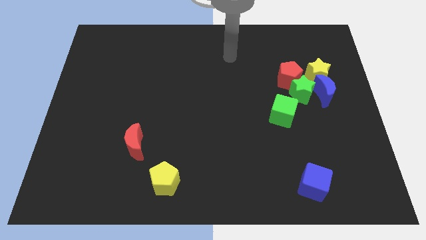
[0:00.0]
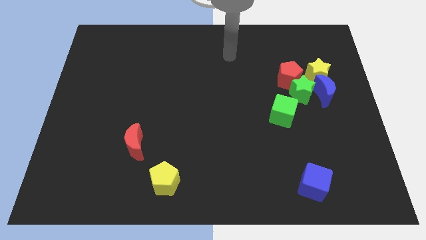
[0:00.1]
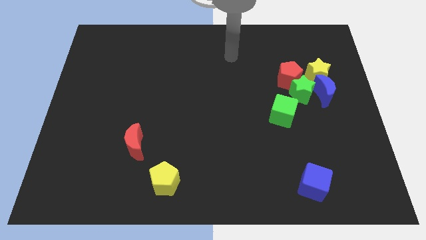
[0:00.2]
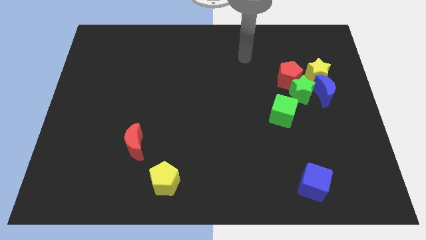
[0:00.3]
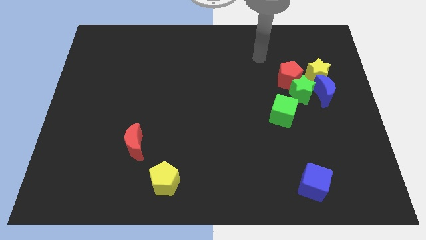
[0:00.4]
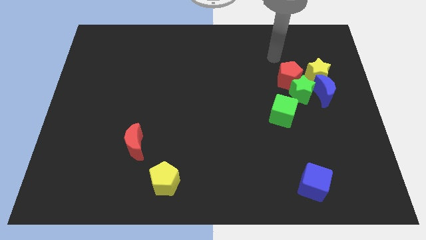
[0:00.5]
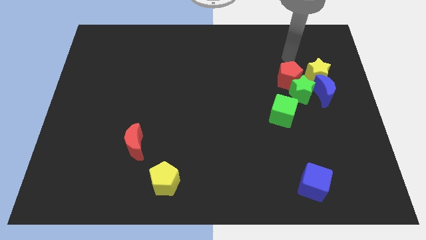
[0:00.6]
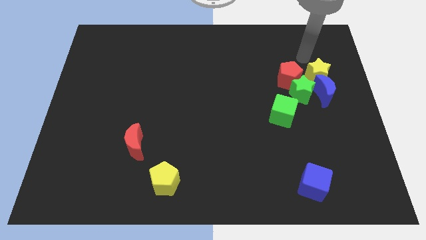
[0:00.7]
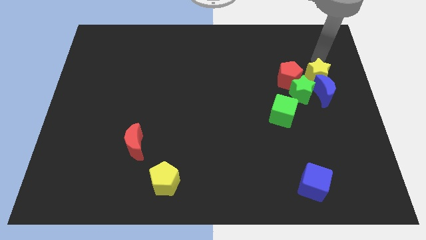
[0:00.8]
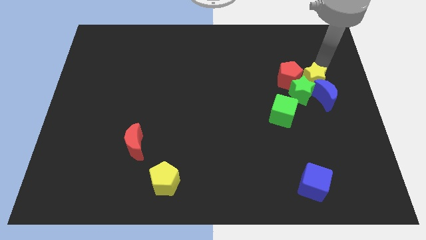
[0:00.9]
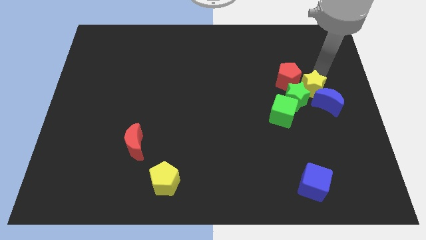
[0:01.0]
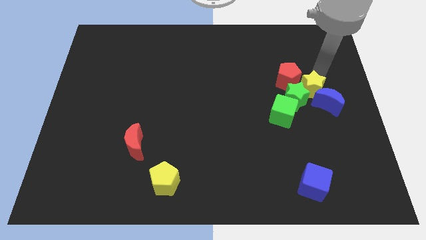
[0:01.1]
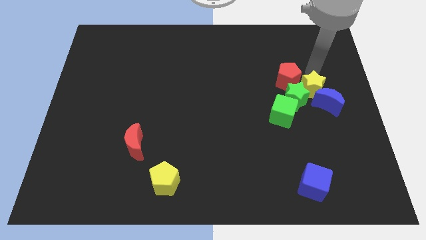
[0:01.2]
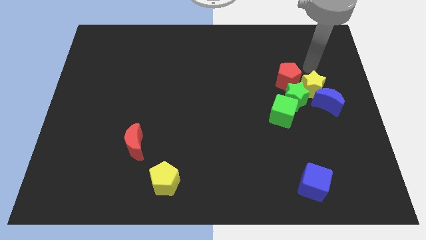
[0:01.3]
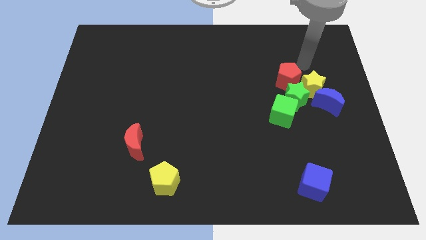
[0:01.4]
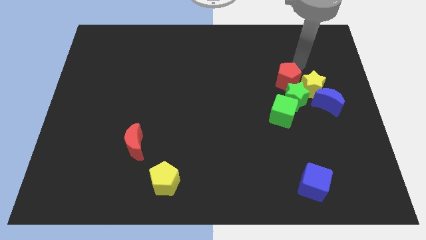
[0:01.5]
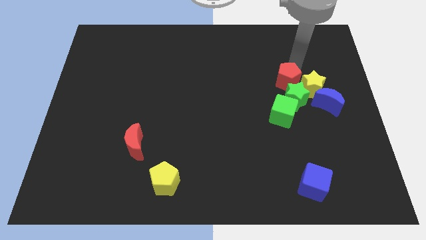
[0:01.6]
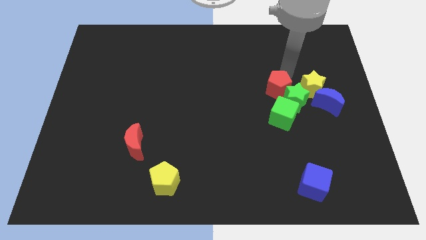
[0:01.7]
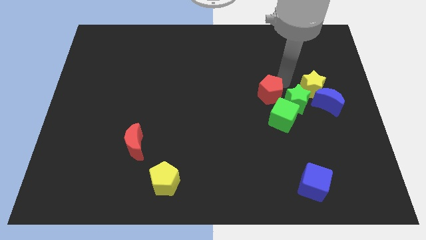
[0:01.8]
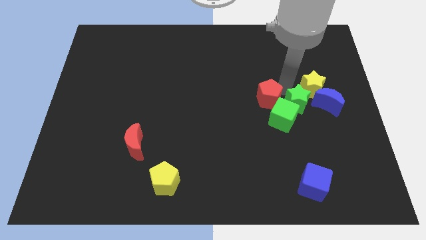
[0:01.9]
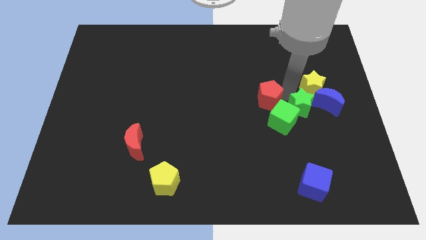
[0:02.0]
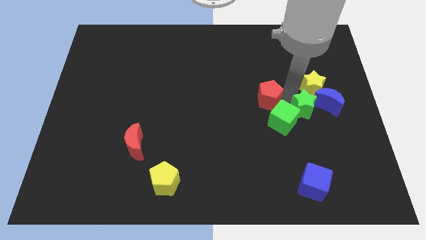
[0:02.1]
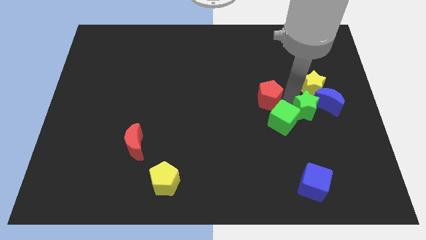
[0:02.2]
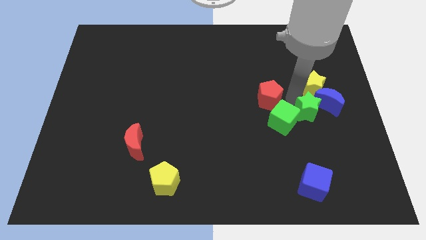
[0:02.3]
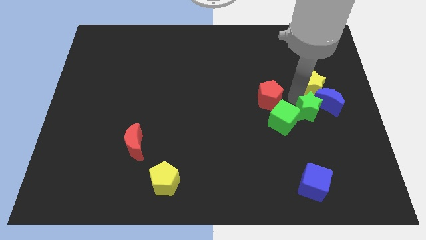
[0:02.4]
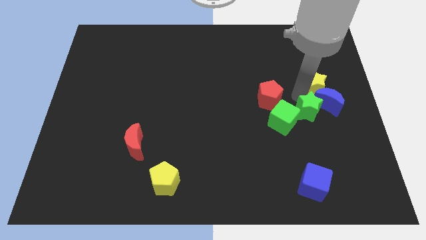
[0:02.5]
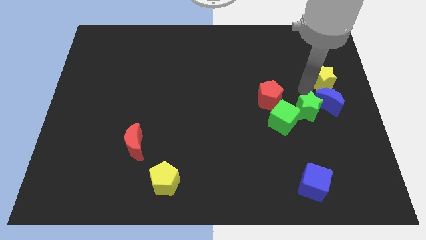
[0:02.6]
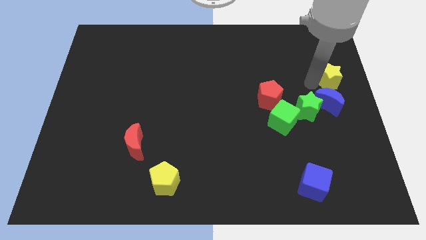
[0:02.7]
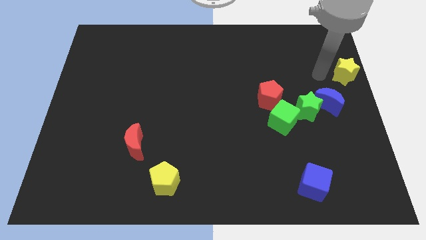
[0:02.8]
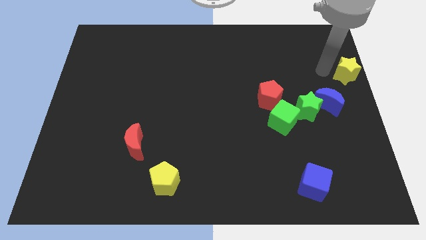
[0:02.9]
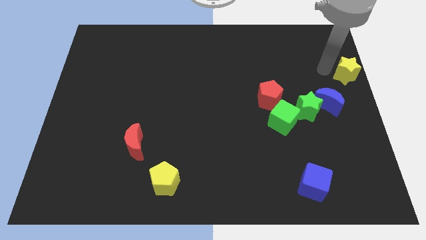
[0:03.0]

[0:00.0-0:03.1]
move the yellow star to the center right corner of the board

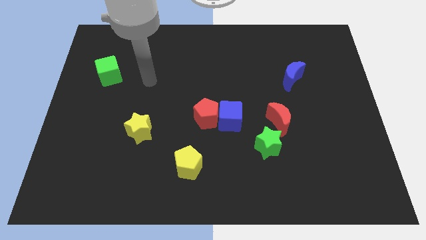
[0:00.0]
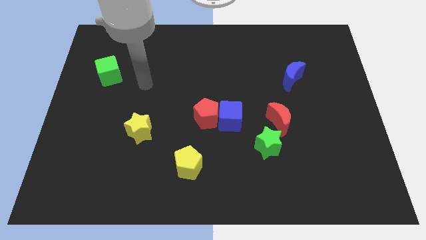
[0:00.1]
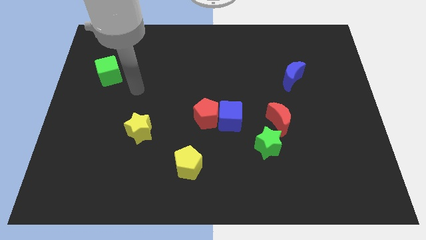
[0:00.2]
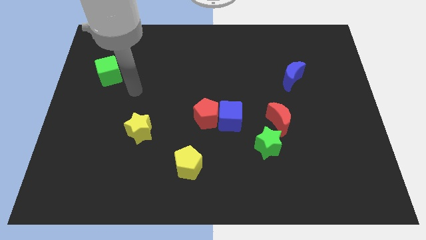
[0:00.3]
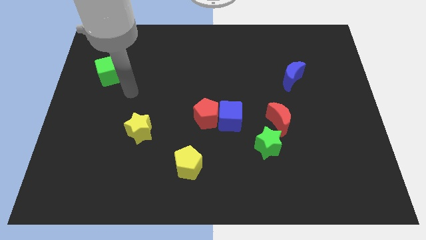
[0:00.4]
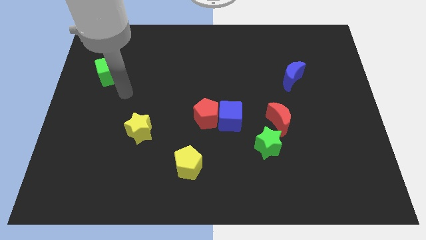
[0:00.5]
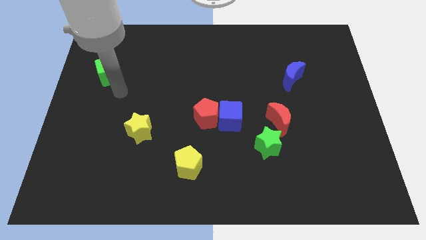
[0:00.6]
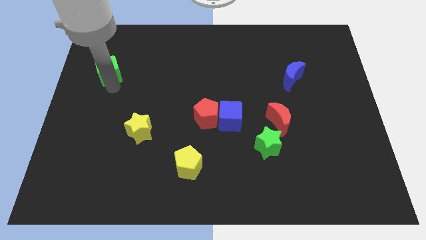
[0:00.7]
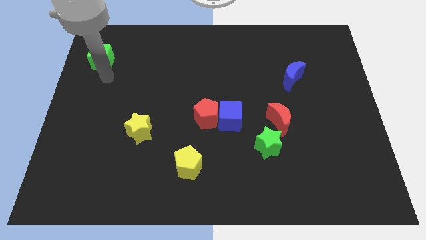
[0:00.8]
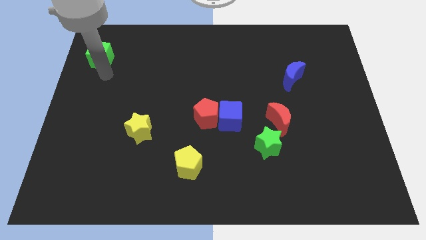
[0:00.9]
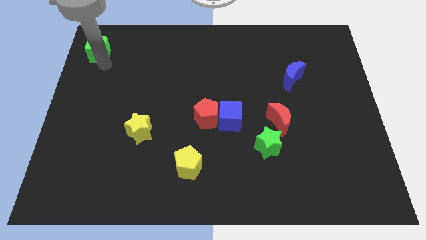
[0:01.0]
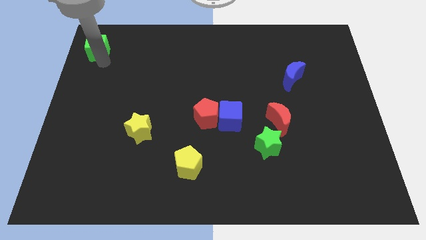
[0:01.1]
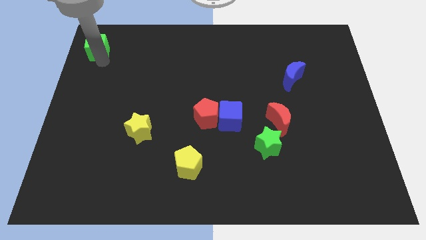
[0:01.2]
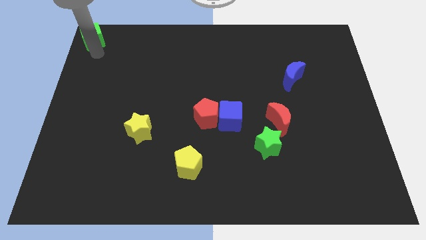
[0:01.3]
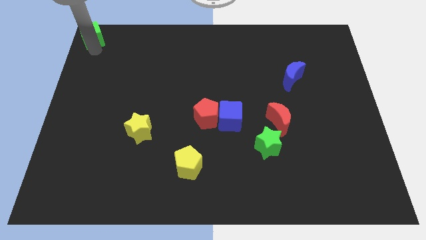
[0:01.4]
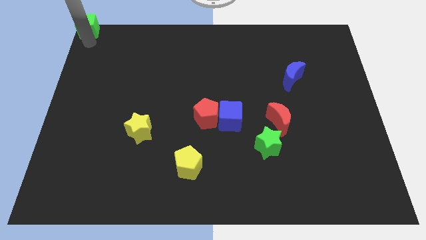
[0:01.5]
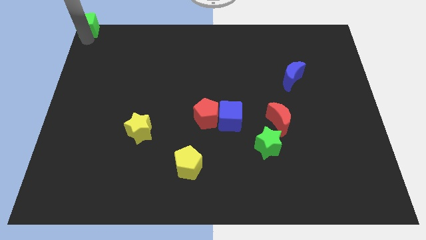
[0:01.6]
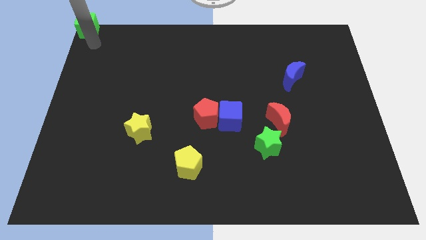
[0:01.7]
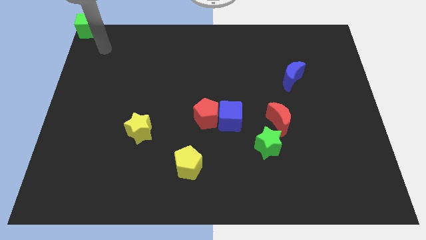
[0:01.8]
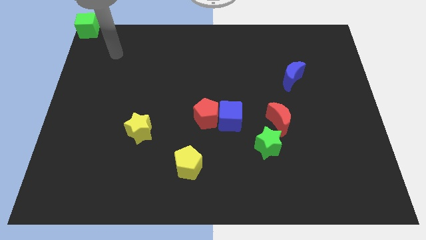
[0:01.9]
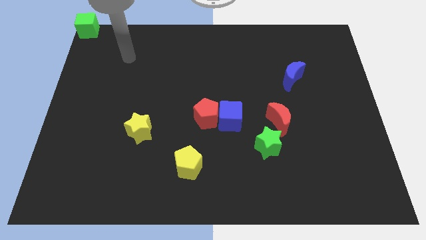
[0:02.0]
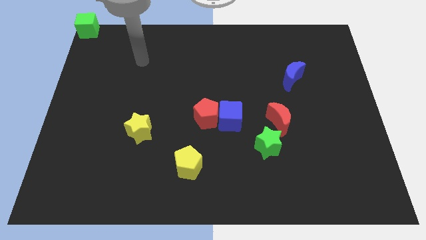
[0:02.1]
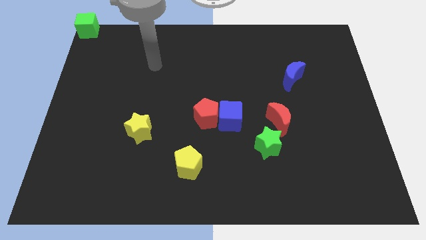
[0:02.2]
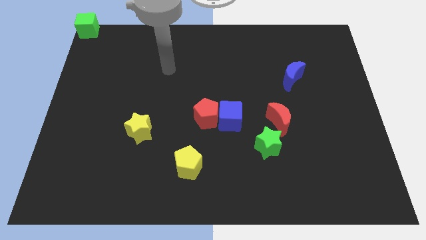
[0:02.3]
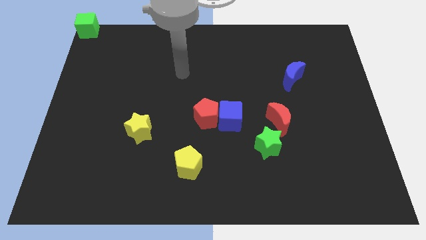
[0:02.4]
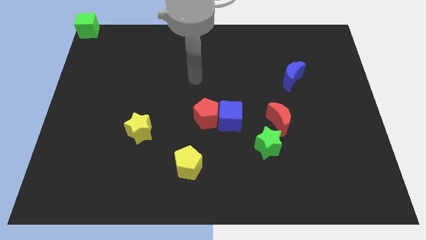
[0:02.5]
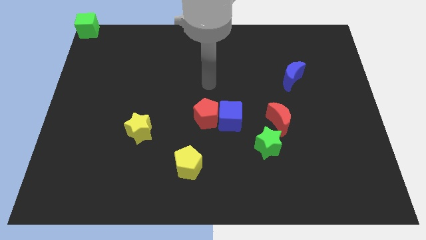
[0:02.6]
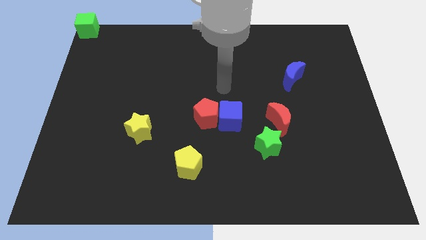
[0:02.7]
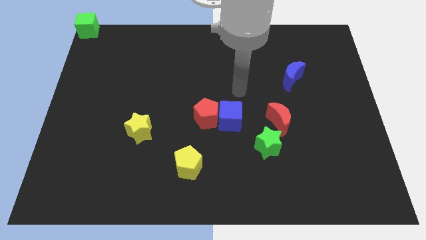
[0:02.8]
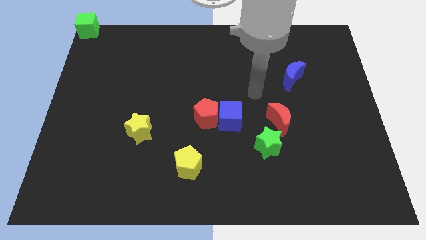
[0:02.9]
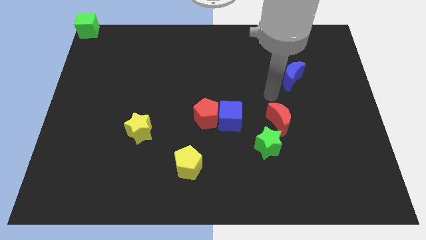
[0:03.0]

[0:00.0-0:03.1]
move green cube to the top left

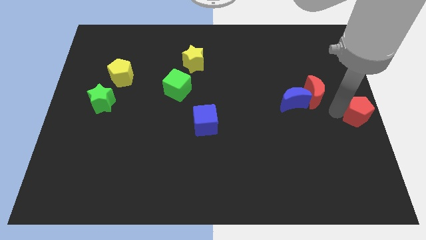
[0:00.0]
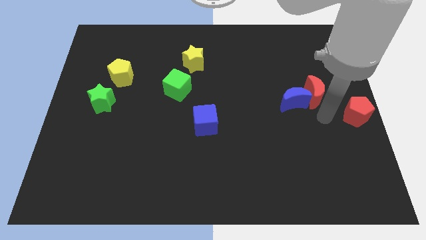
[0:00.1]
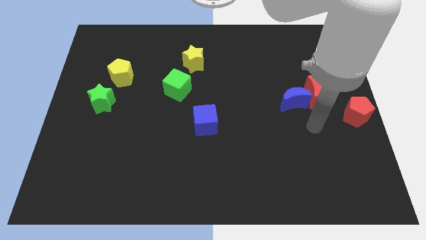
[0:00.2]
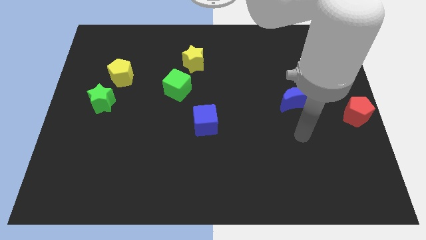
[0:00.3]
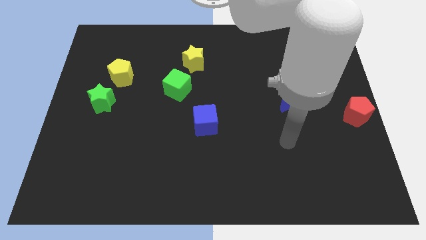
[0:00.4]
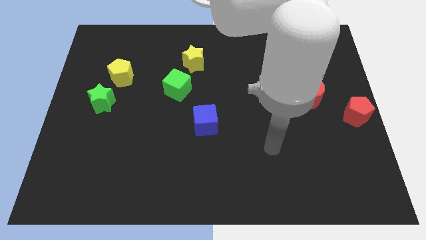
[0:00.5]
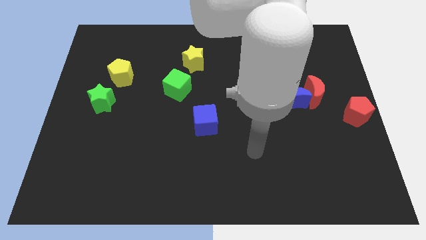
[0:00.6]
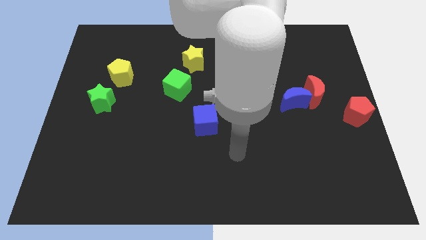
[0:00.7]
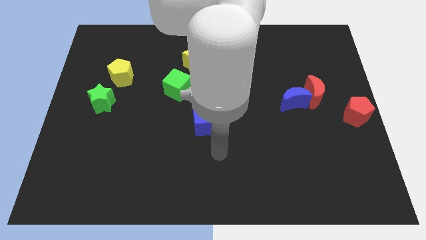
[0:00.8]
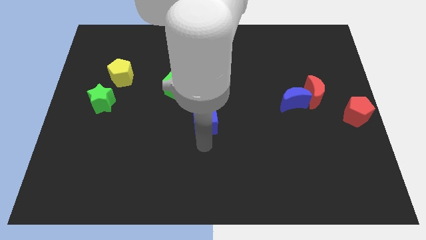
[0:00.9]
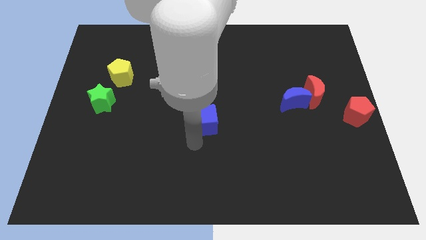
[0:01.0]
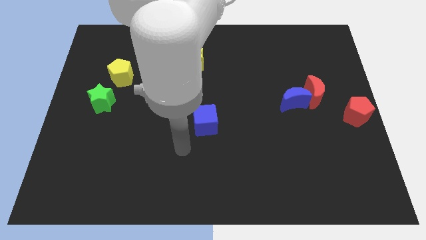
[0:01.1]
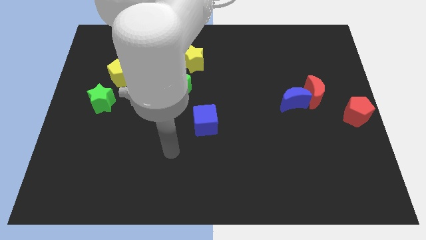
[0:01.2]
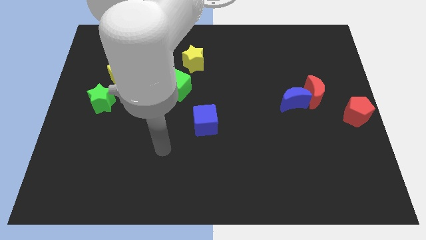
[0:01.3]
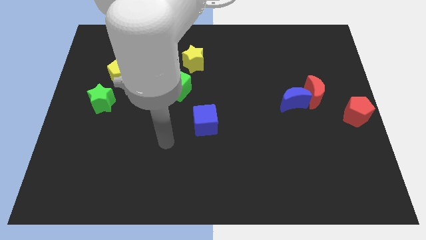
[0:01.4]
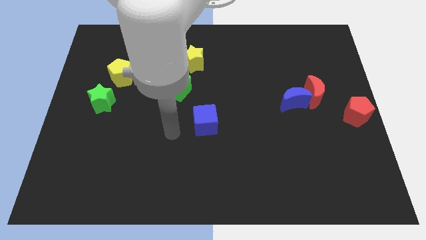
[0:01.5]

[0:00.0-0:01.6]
point your arm towards blue cube

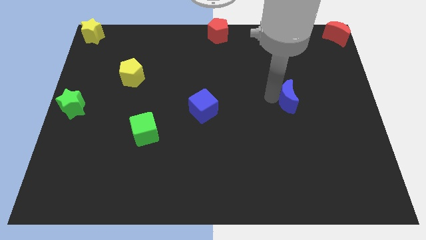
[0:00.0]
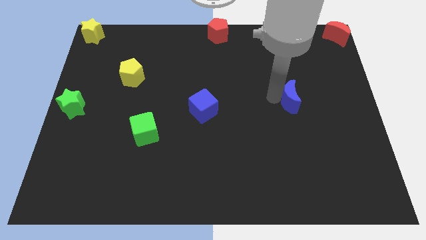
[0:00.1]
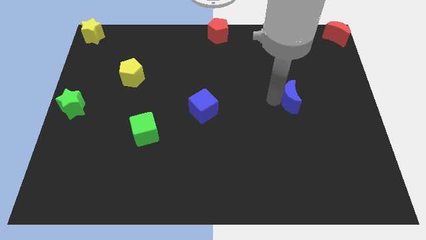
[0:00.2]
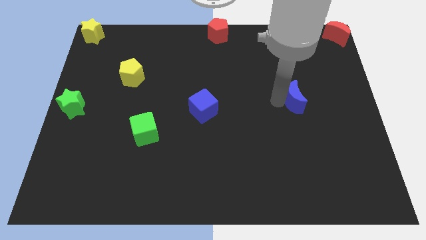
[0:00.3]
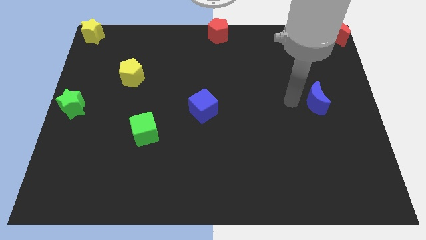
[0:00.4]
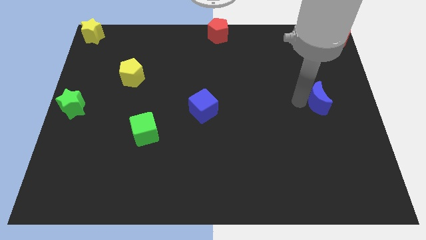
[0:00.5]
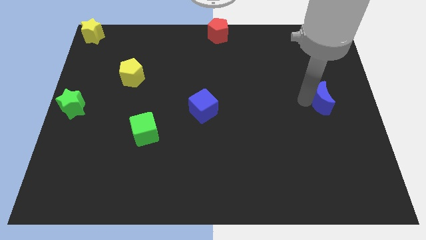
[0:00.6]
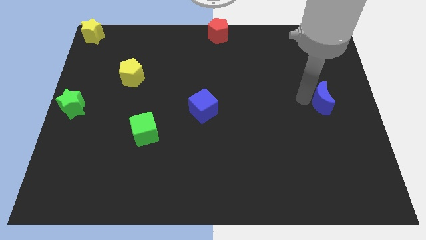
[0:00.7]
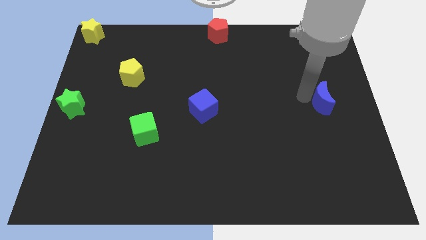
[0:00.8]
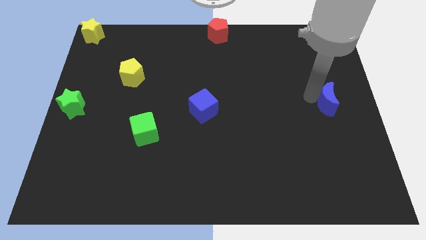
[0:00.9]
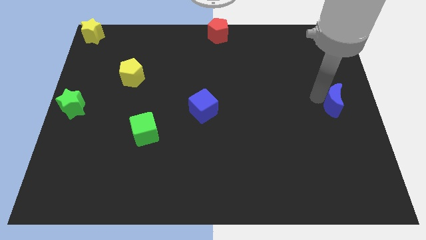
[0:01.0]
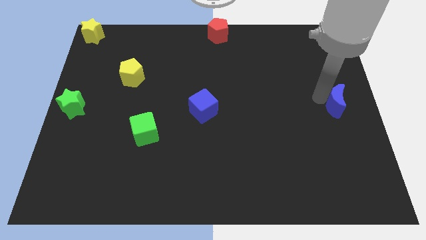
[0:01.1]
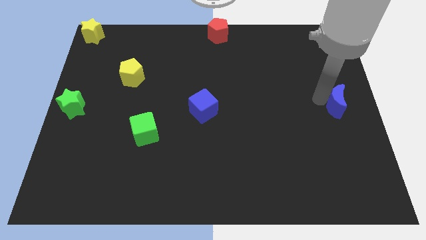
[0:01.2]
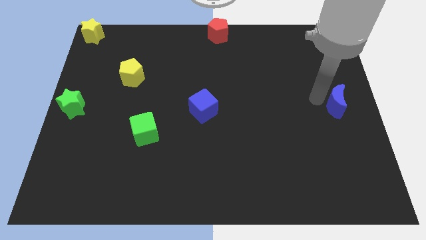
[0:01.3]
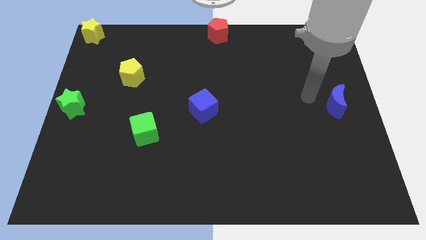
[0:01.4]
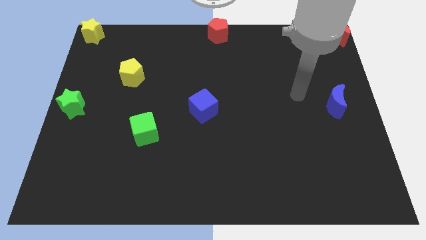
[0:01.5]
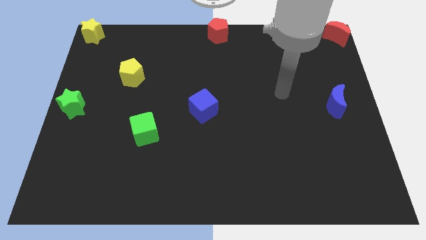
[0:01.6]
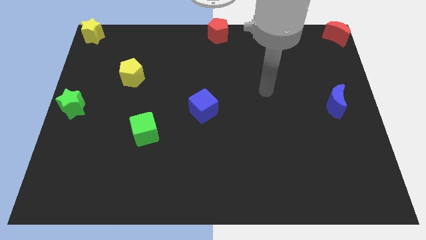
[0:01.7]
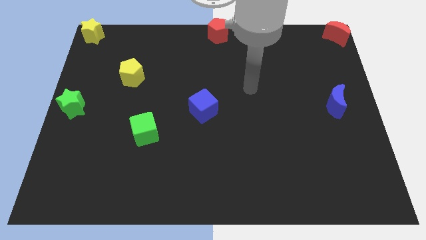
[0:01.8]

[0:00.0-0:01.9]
push the blue crescent towards the center right side of the board
